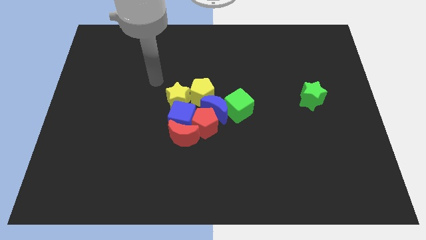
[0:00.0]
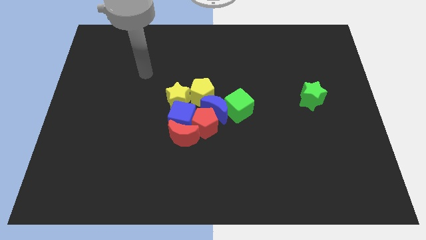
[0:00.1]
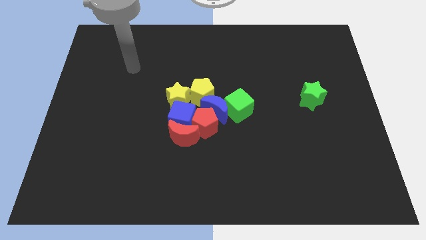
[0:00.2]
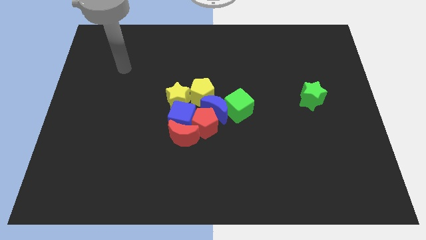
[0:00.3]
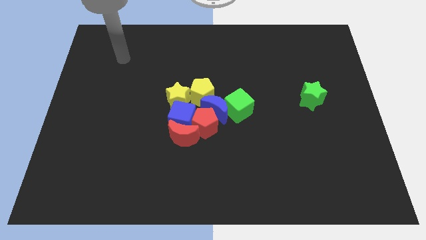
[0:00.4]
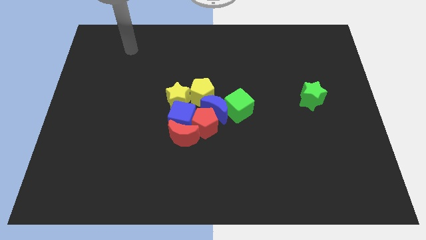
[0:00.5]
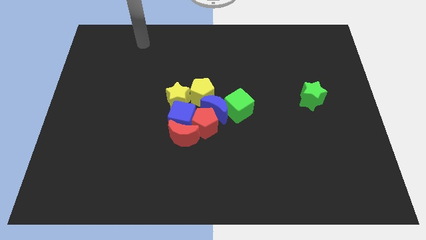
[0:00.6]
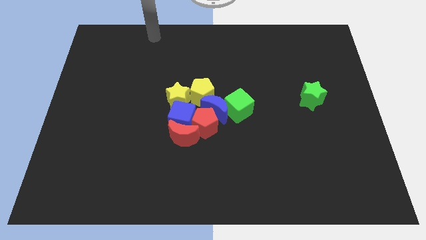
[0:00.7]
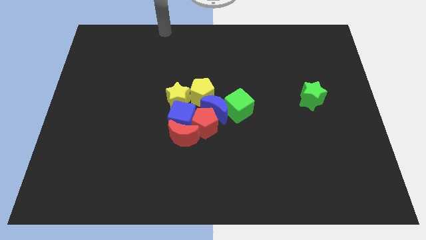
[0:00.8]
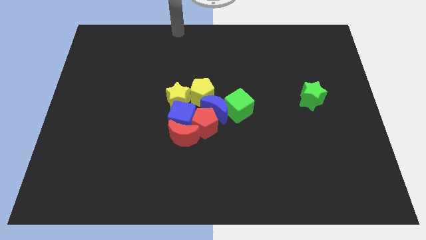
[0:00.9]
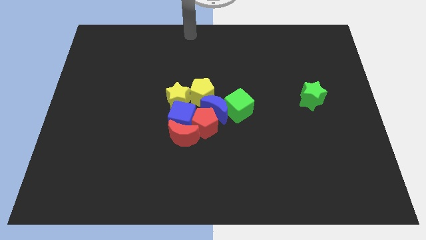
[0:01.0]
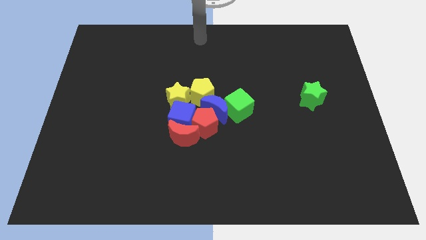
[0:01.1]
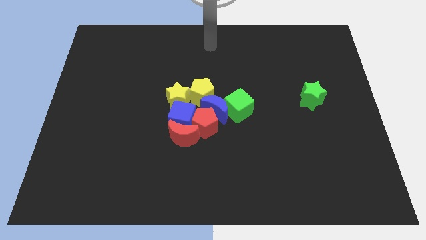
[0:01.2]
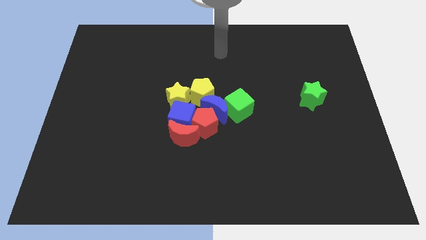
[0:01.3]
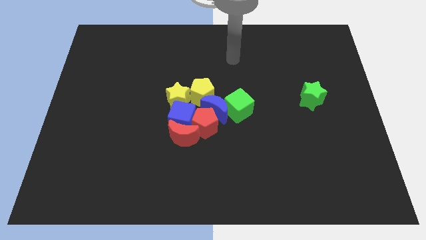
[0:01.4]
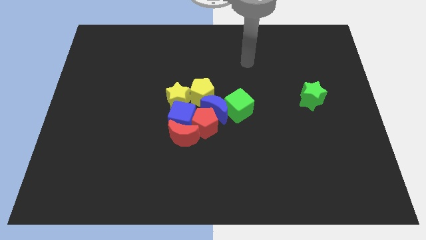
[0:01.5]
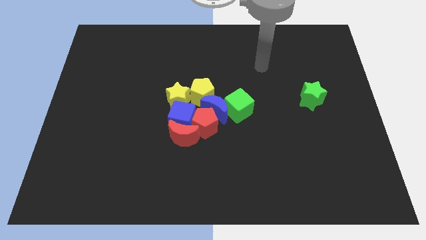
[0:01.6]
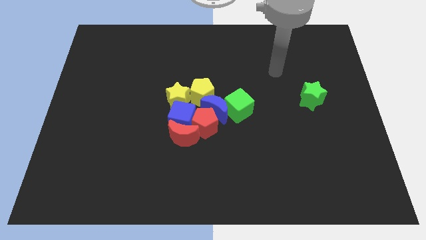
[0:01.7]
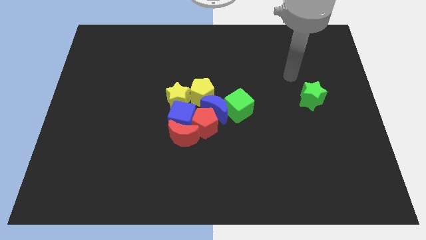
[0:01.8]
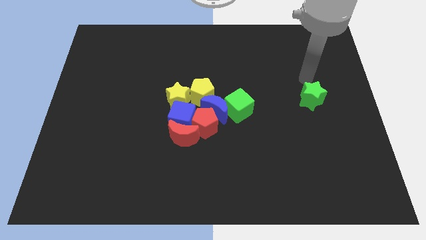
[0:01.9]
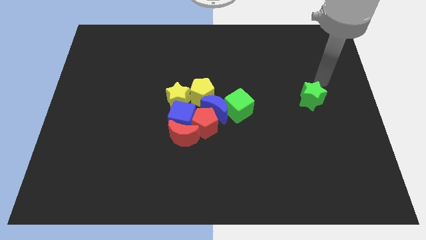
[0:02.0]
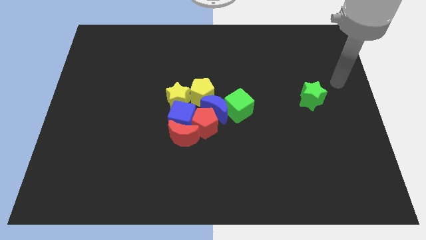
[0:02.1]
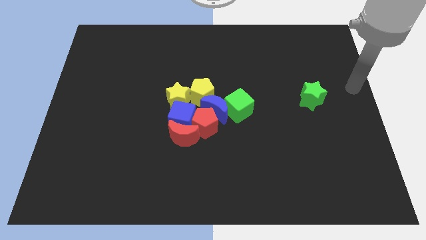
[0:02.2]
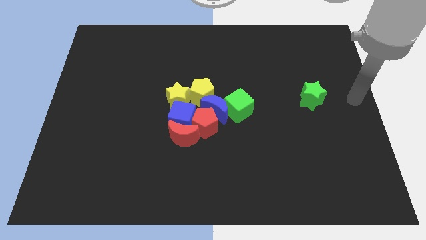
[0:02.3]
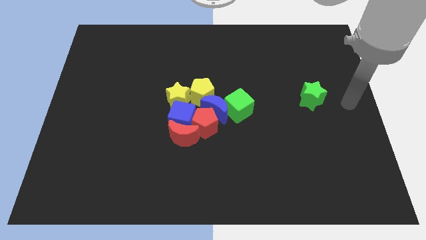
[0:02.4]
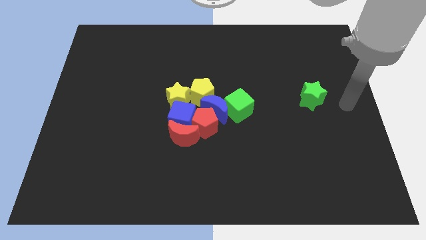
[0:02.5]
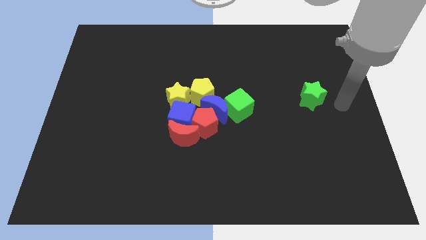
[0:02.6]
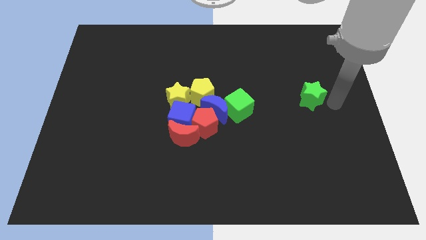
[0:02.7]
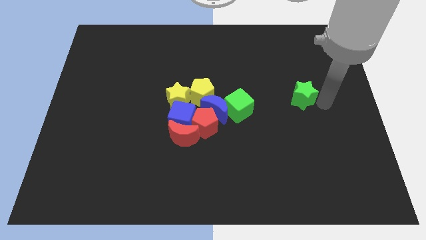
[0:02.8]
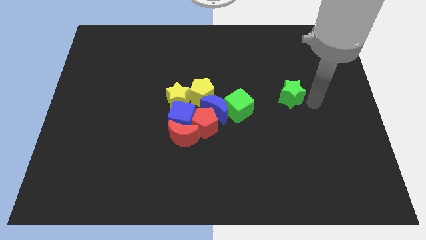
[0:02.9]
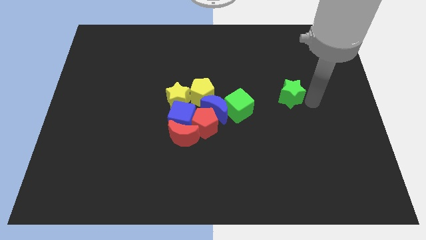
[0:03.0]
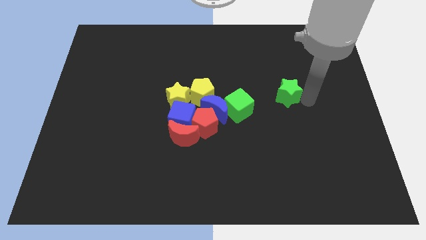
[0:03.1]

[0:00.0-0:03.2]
move the green star to the left of the board

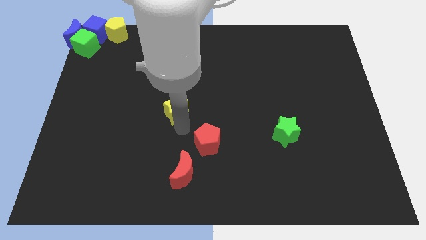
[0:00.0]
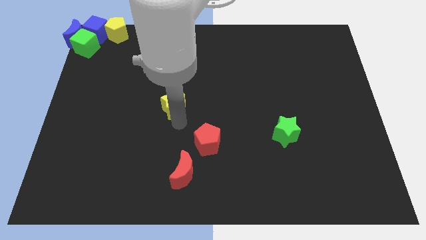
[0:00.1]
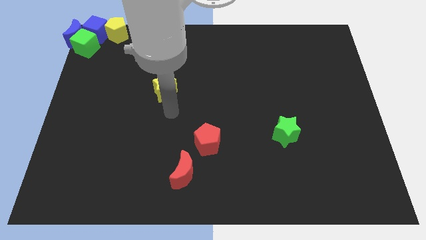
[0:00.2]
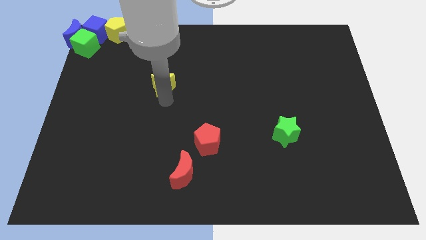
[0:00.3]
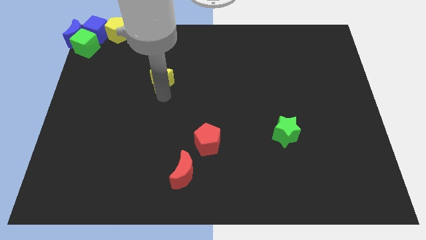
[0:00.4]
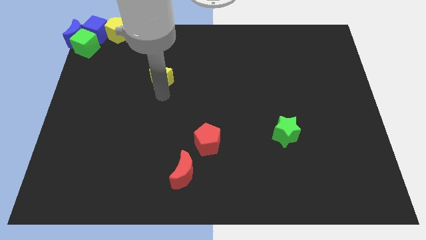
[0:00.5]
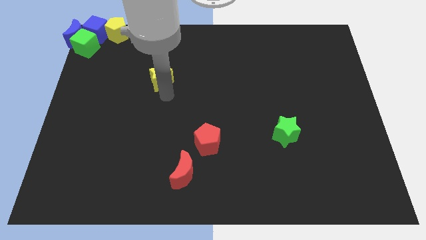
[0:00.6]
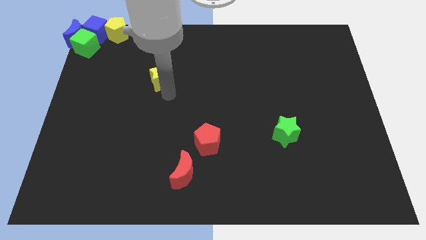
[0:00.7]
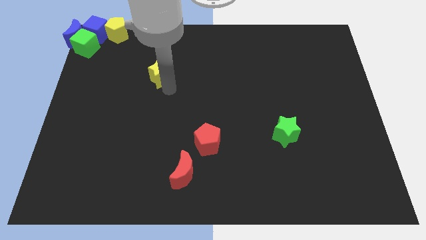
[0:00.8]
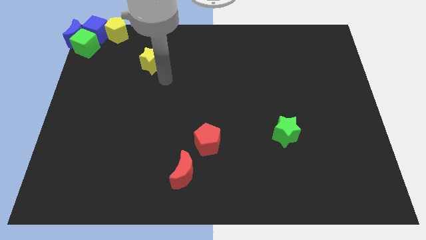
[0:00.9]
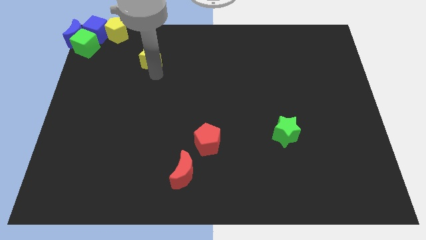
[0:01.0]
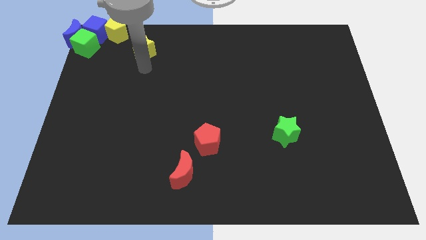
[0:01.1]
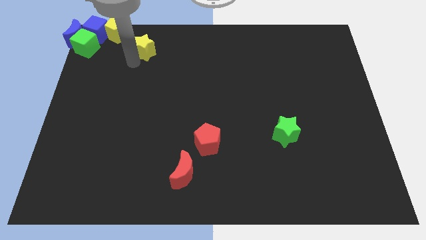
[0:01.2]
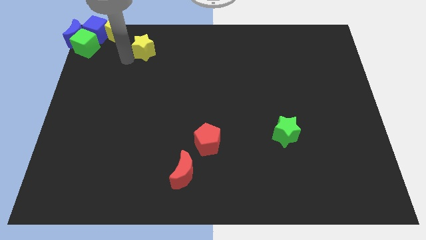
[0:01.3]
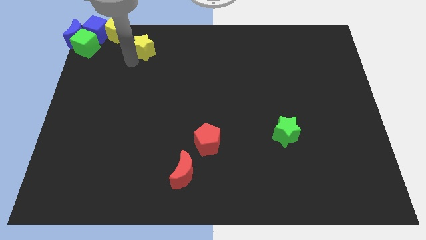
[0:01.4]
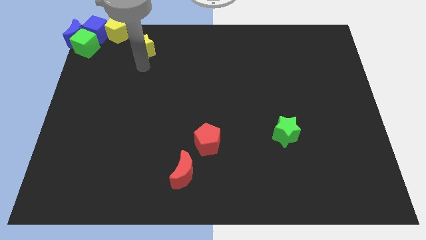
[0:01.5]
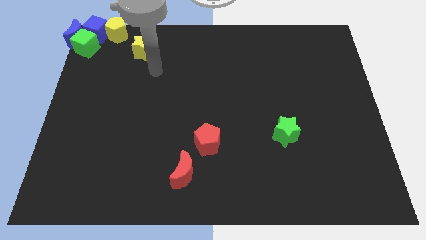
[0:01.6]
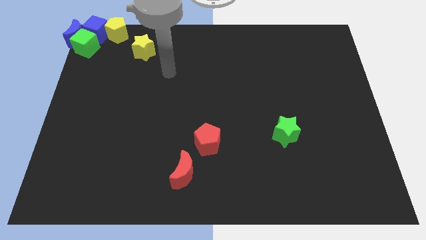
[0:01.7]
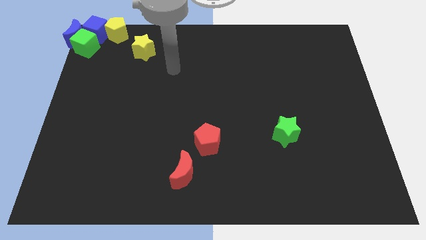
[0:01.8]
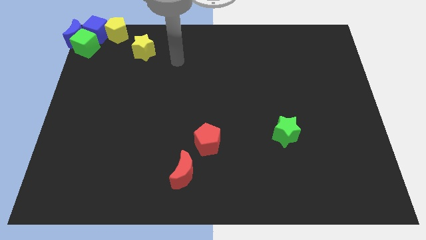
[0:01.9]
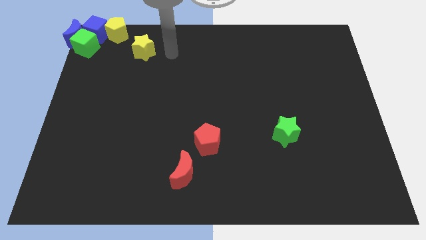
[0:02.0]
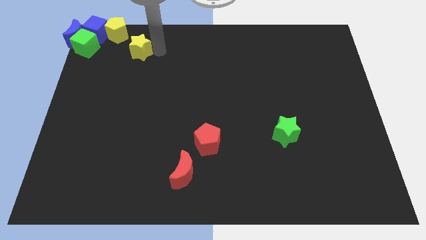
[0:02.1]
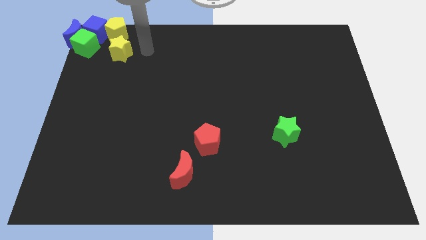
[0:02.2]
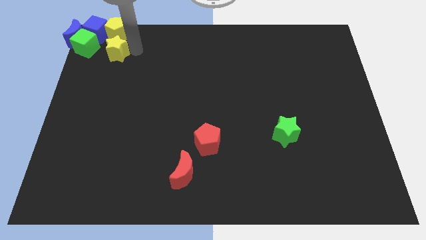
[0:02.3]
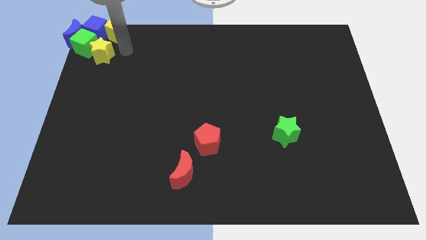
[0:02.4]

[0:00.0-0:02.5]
place the yellow star at the bottom of yellow pentagon

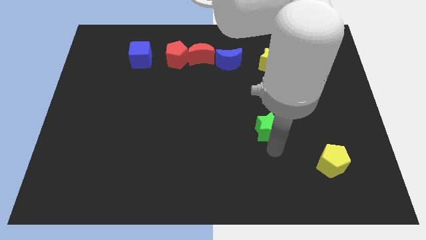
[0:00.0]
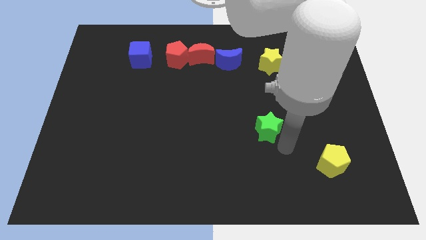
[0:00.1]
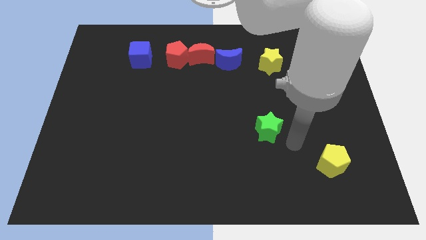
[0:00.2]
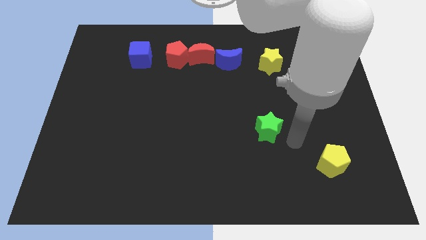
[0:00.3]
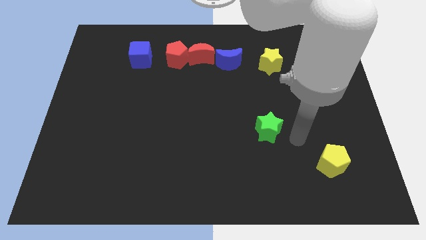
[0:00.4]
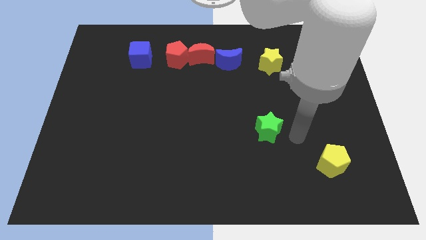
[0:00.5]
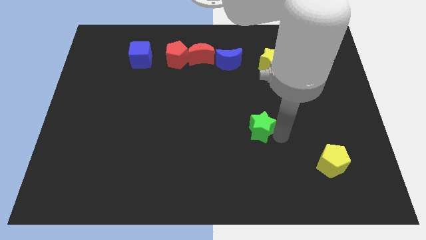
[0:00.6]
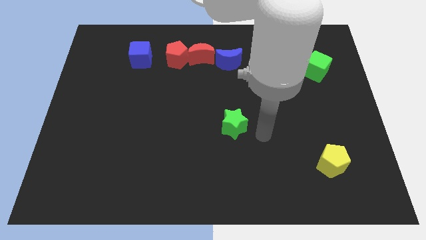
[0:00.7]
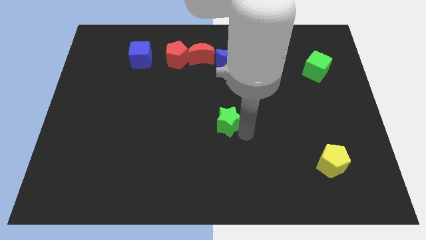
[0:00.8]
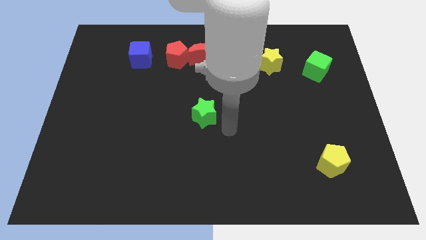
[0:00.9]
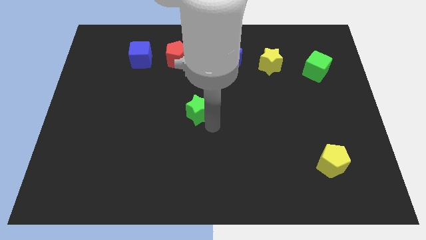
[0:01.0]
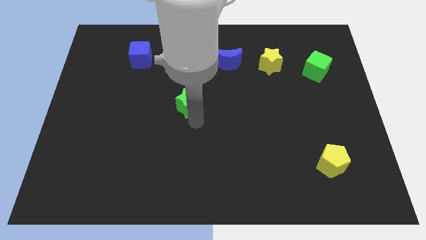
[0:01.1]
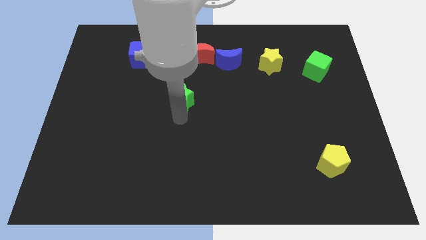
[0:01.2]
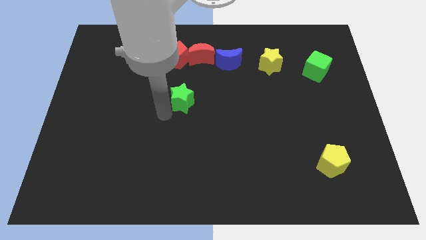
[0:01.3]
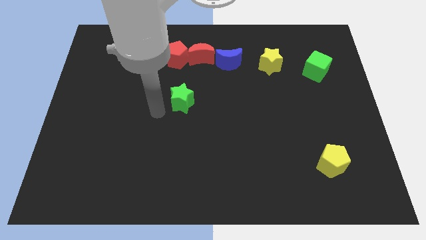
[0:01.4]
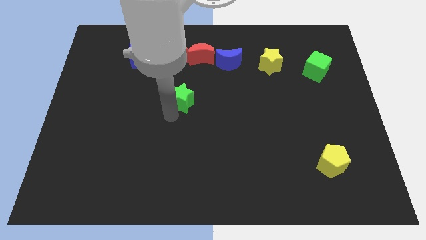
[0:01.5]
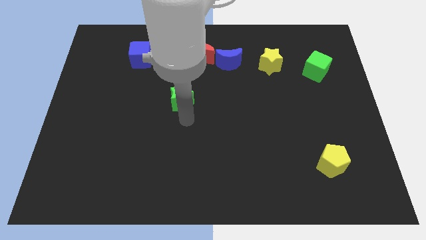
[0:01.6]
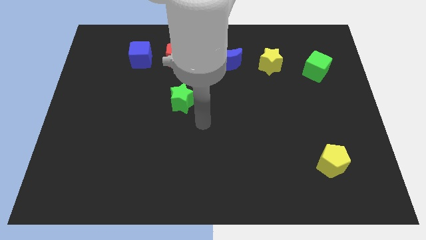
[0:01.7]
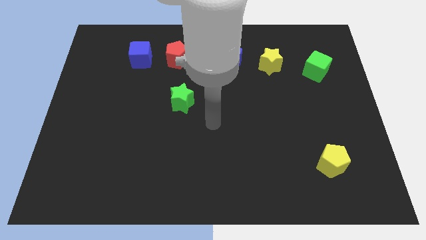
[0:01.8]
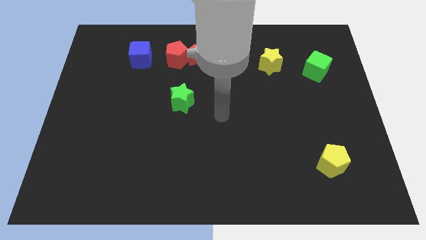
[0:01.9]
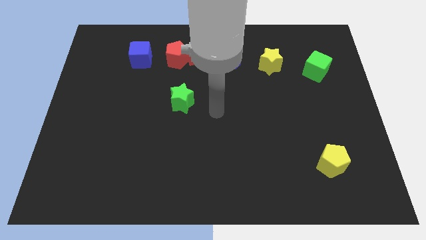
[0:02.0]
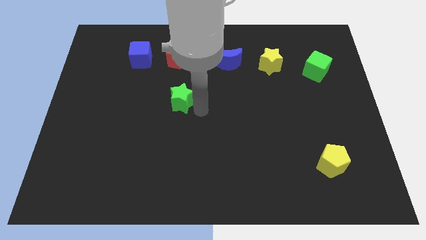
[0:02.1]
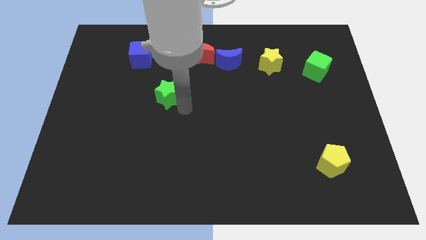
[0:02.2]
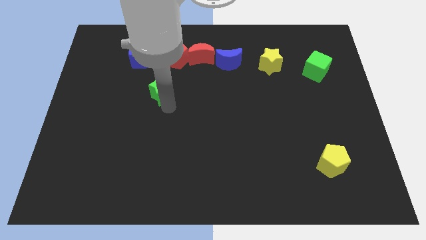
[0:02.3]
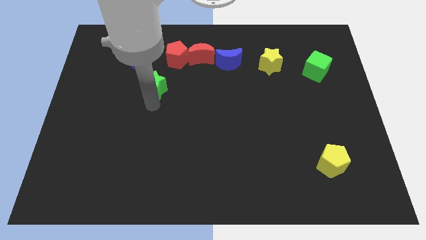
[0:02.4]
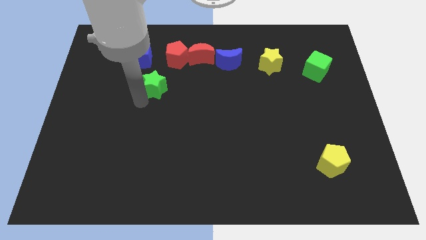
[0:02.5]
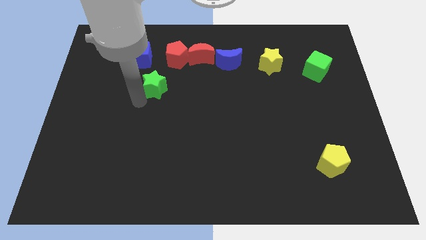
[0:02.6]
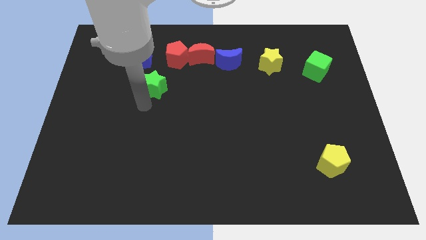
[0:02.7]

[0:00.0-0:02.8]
move the green star to the blue cube

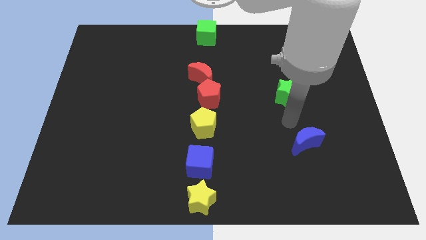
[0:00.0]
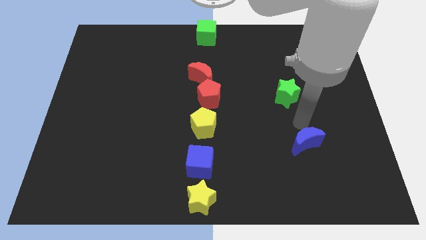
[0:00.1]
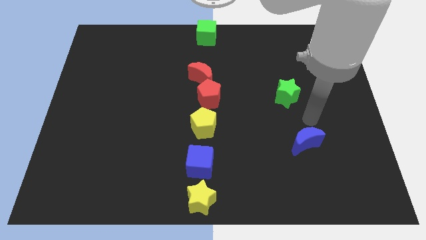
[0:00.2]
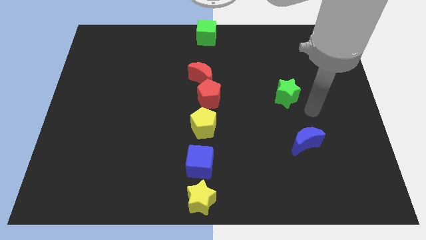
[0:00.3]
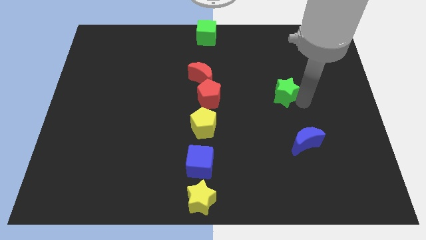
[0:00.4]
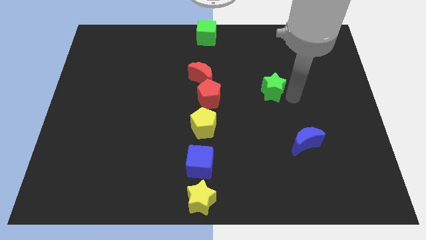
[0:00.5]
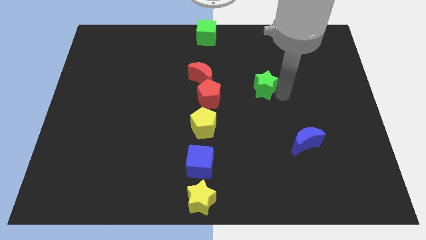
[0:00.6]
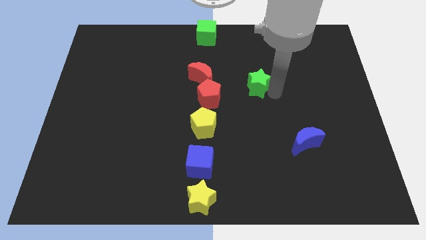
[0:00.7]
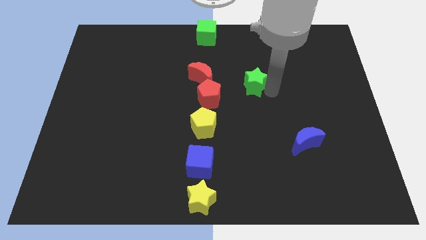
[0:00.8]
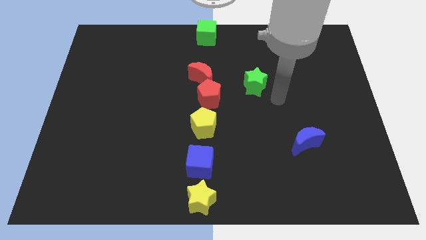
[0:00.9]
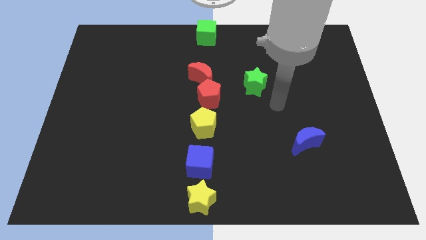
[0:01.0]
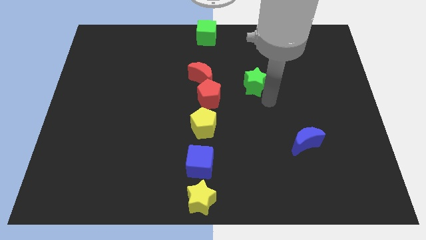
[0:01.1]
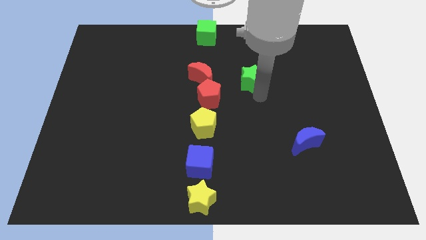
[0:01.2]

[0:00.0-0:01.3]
place the green star parallel right to the red crescent
